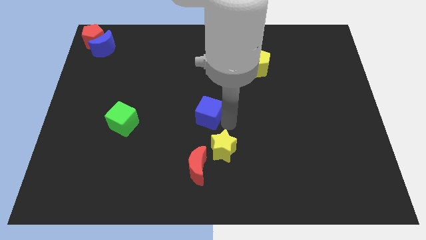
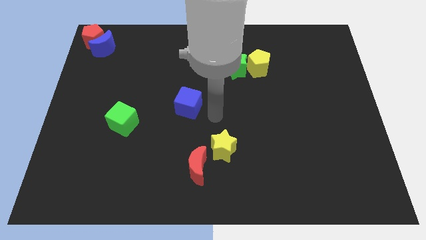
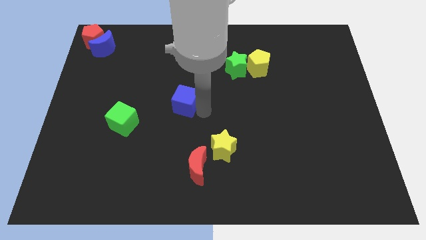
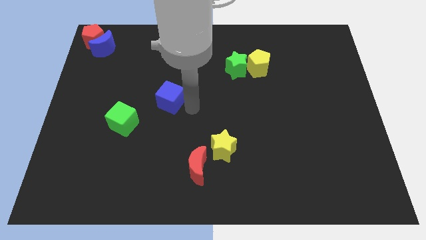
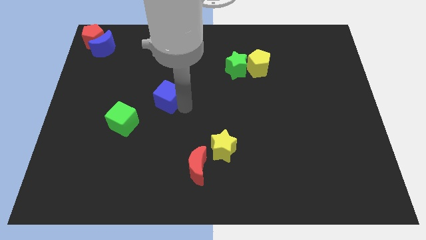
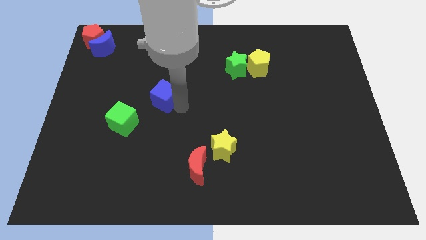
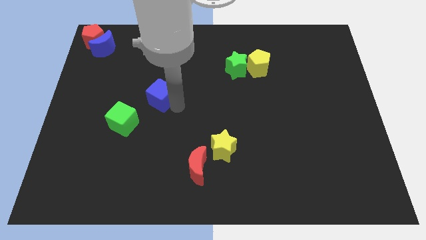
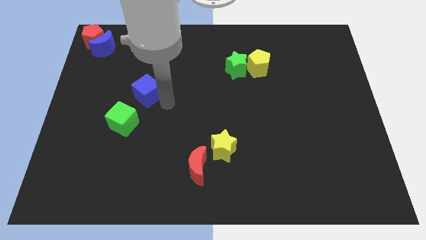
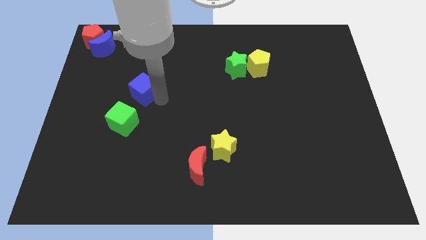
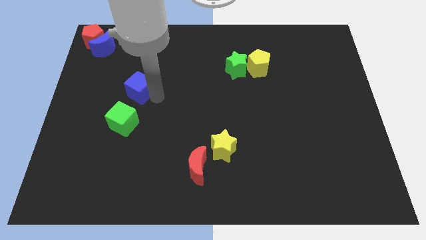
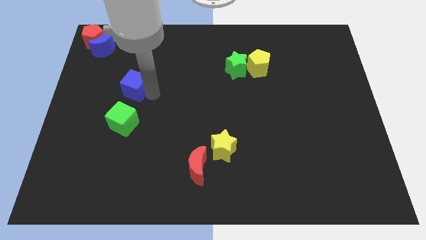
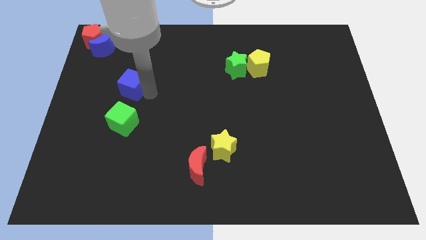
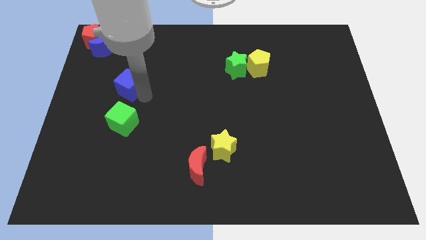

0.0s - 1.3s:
place the blue cube above the green cube

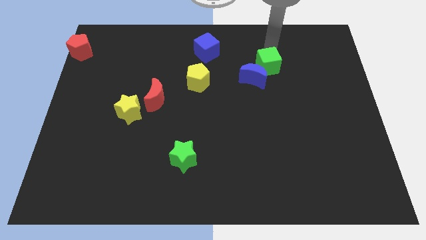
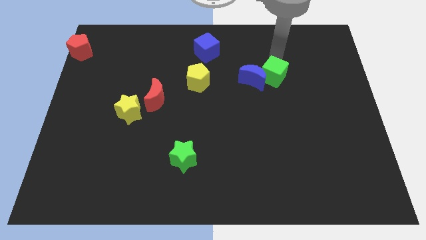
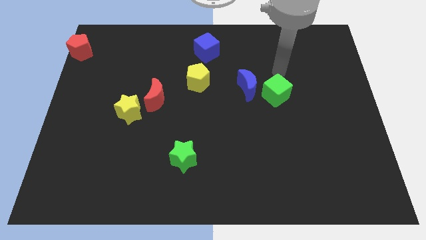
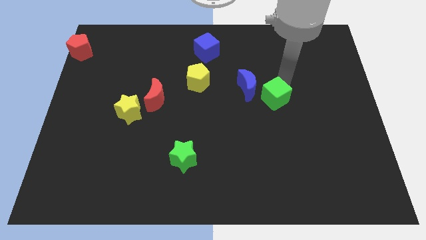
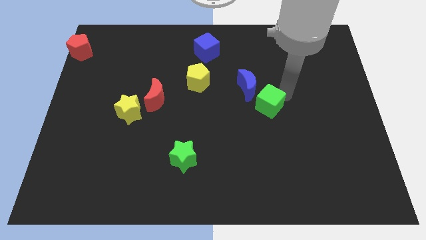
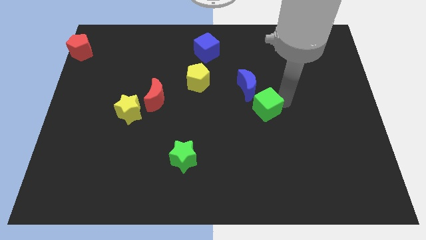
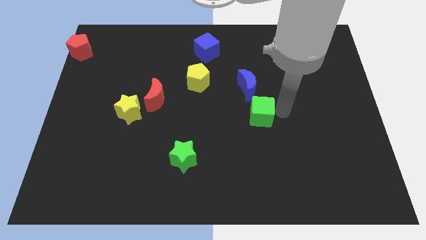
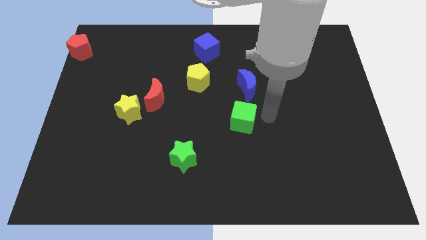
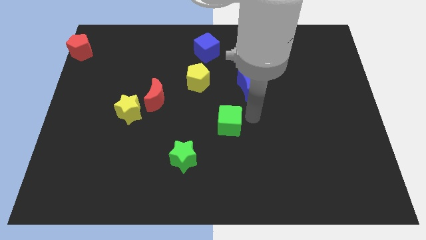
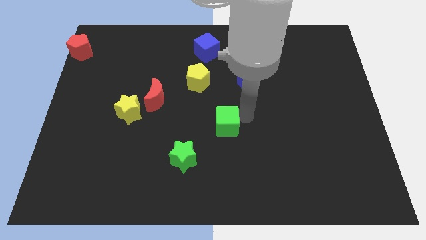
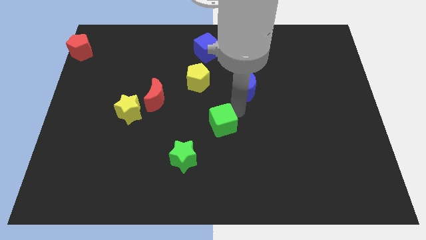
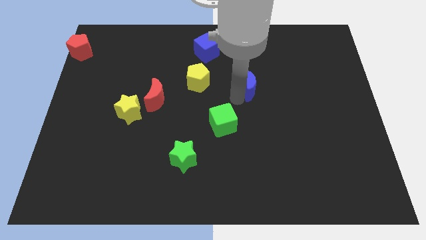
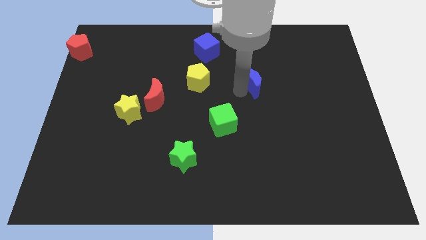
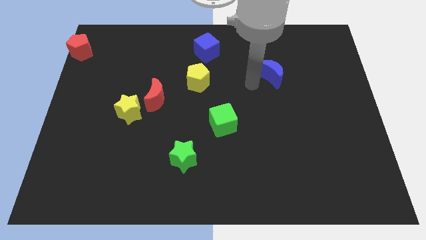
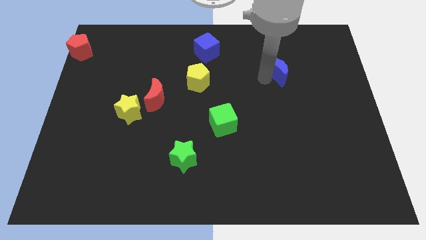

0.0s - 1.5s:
place the green cube to the center of the board

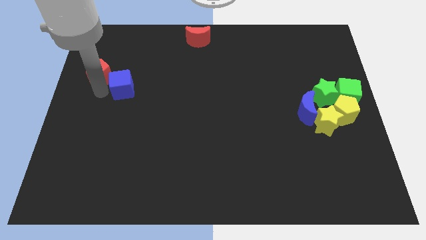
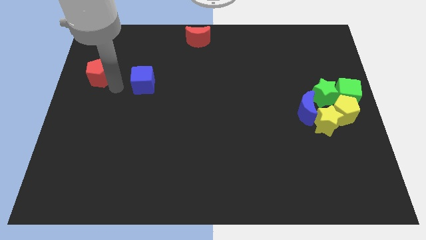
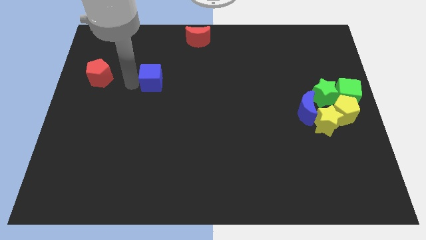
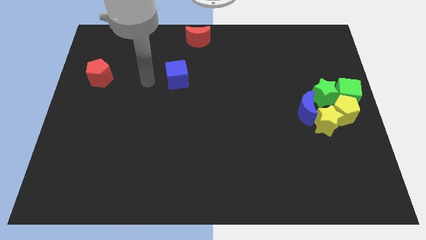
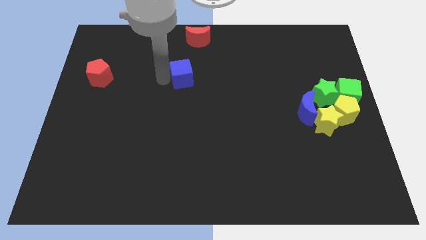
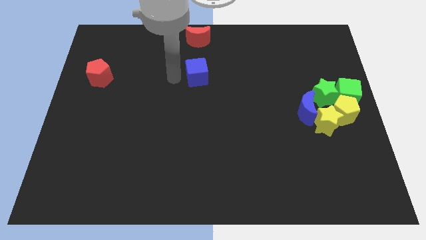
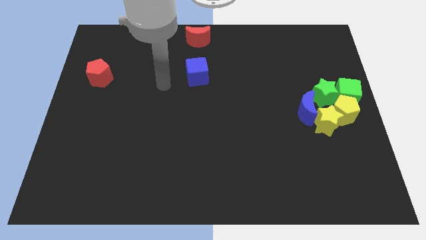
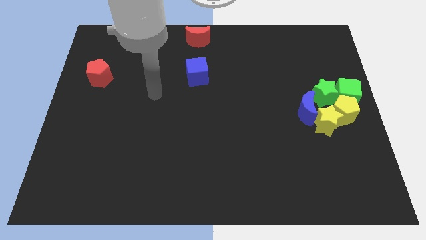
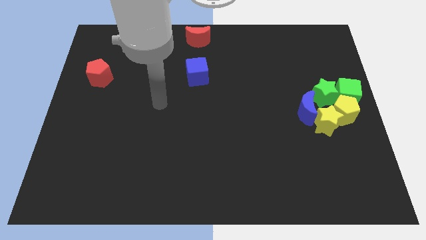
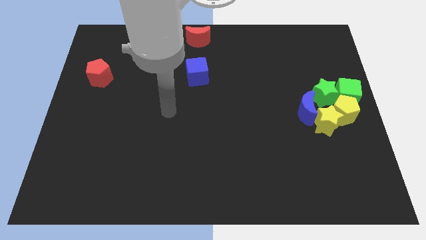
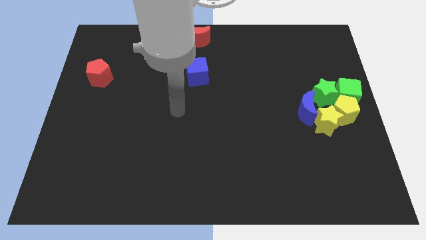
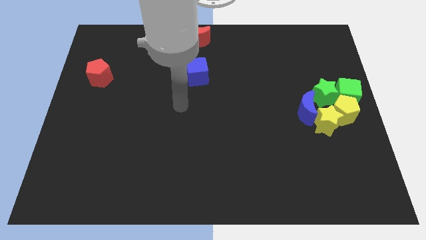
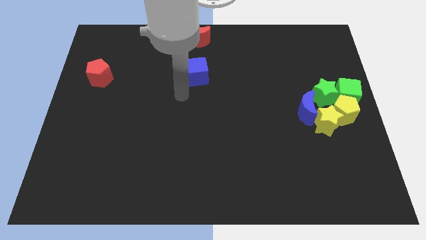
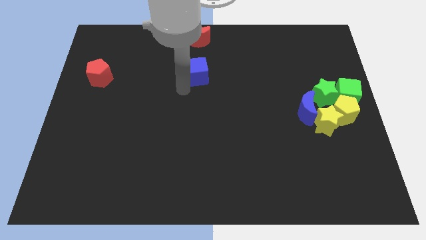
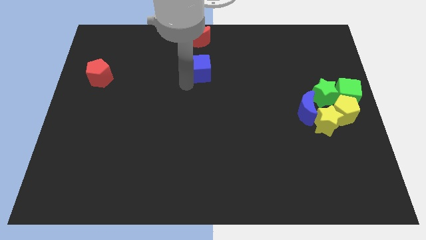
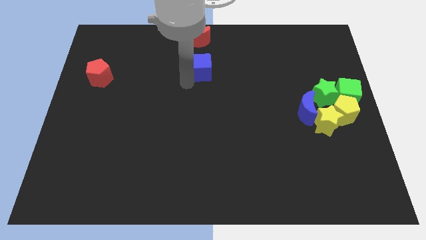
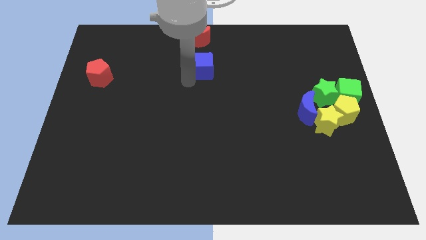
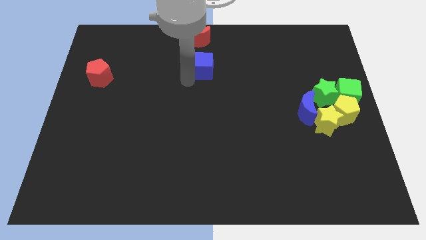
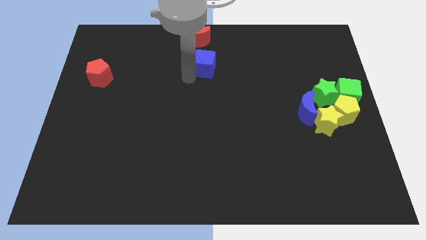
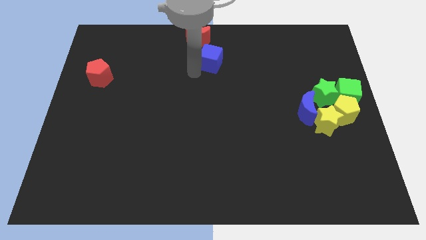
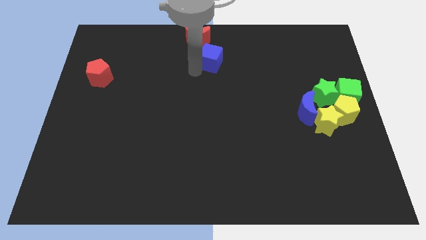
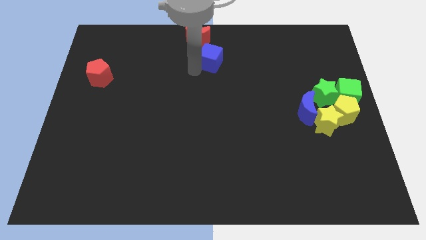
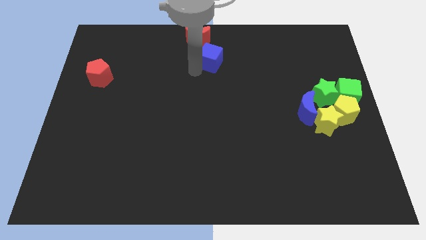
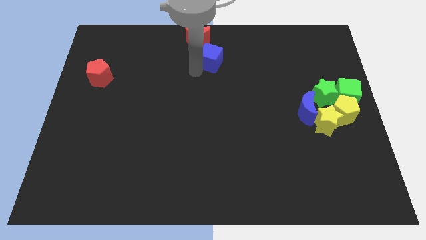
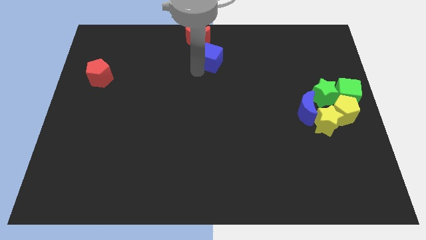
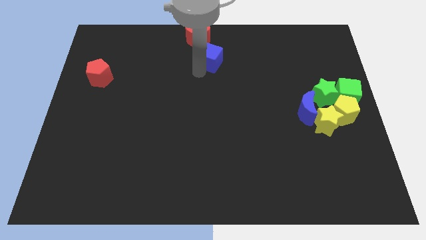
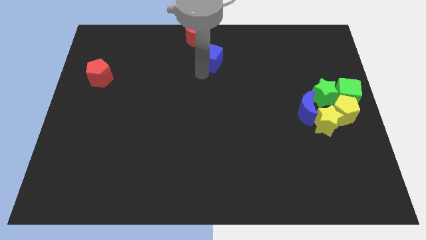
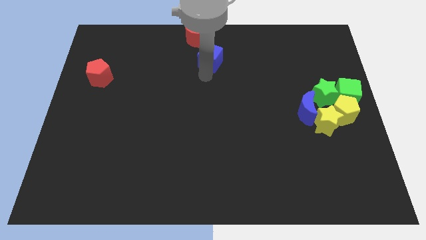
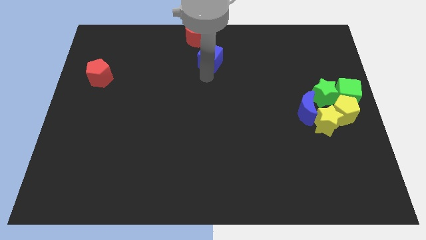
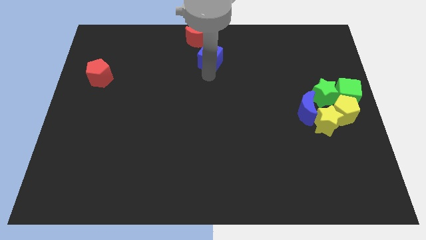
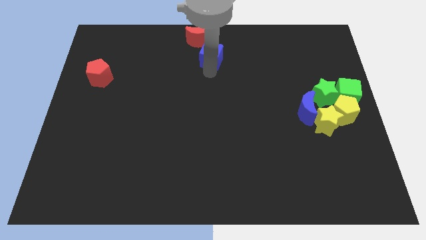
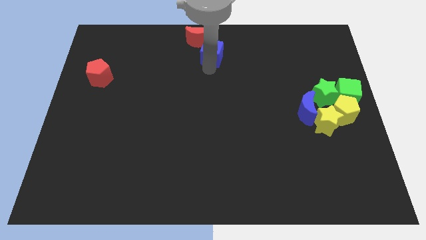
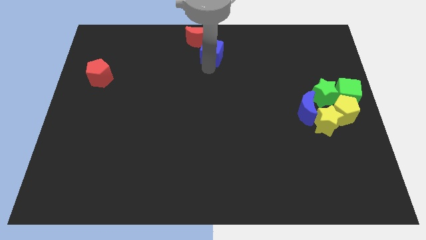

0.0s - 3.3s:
push the blue cube to the bottom right of the red crescent

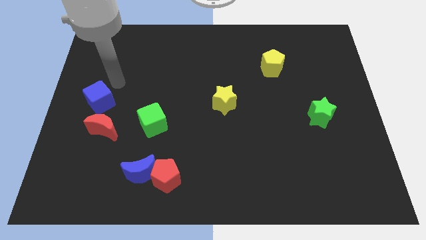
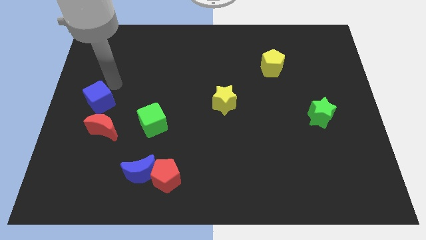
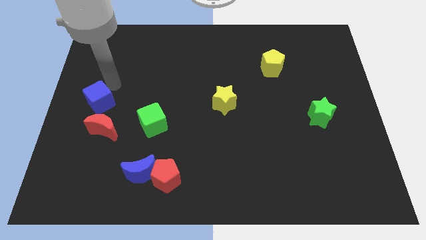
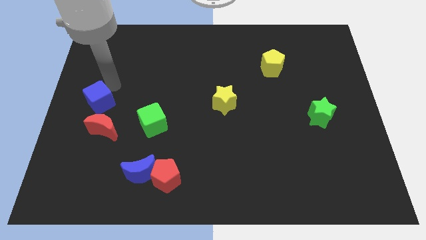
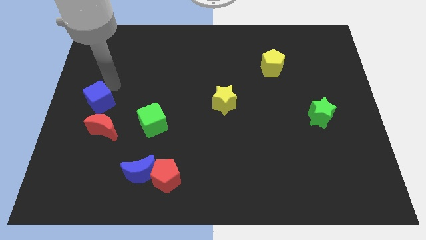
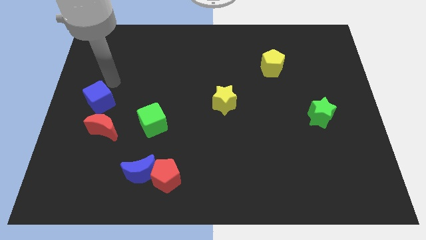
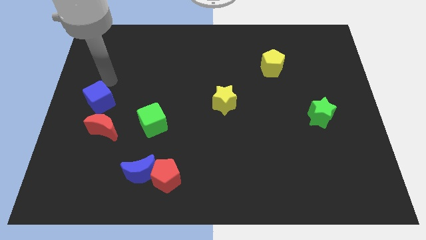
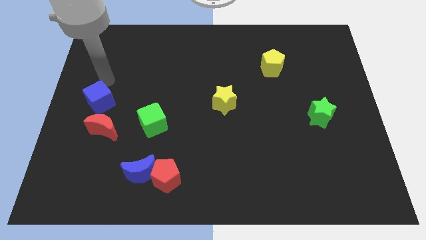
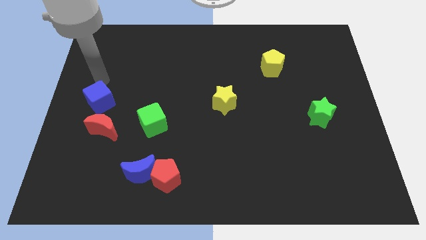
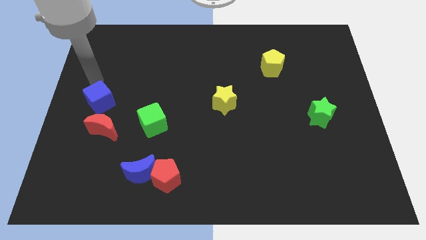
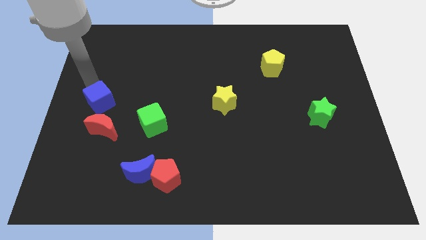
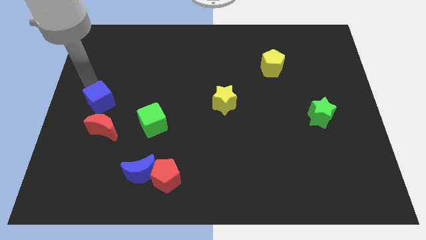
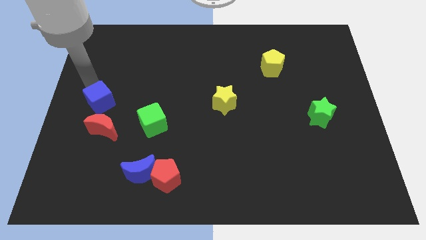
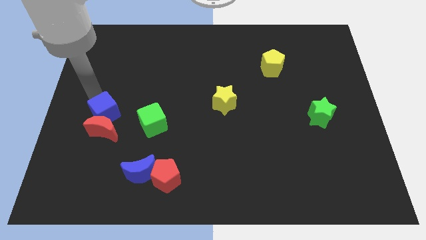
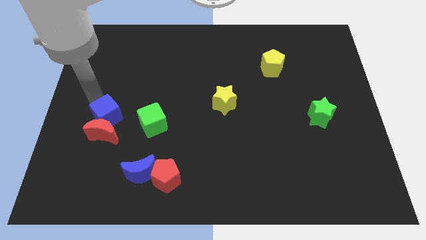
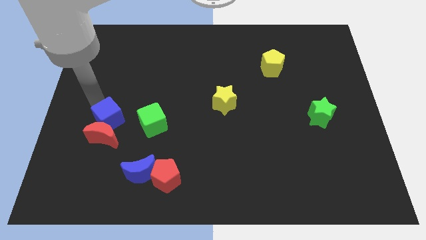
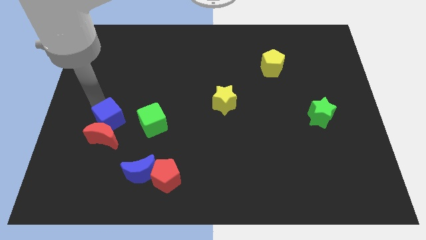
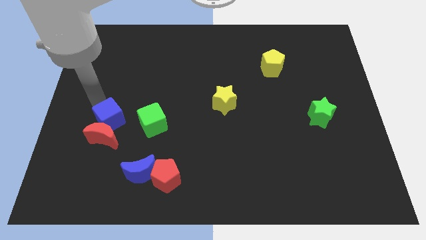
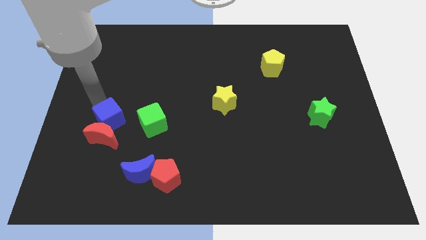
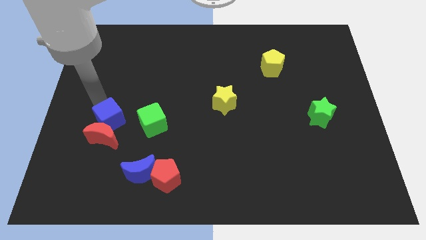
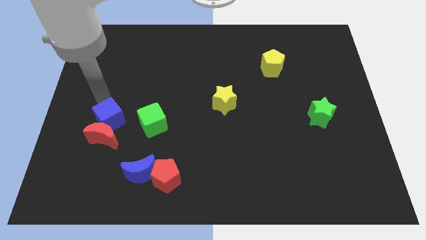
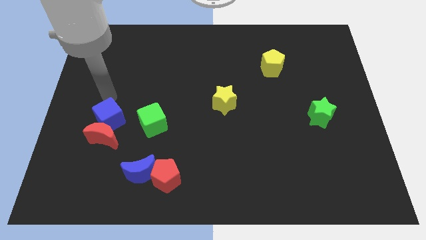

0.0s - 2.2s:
place the blue cube to the top of red crescent

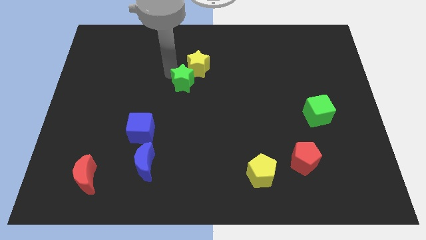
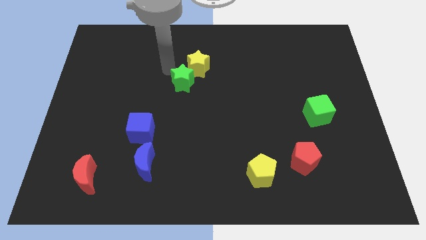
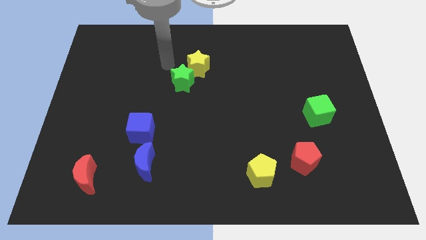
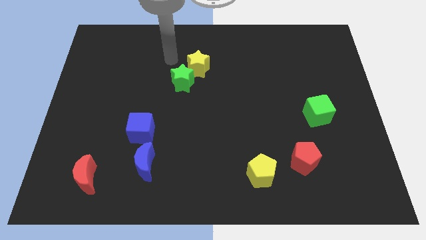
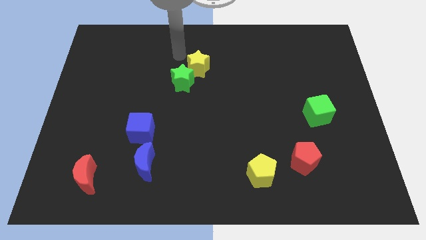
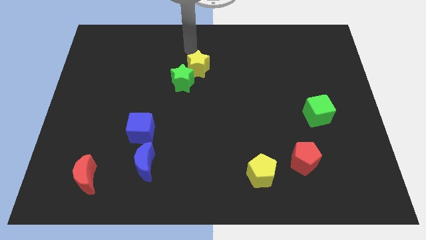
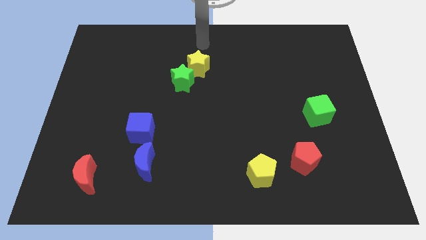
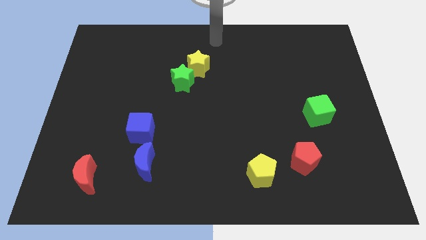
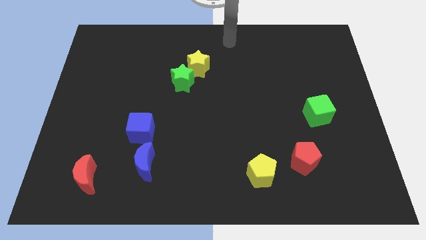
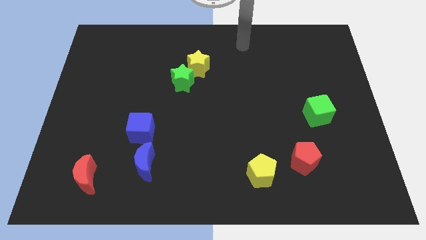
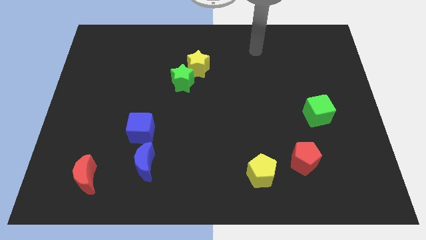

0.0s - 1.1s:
move your arm away from green star
